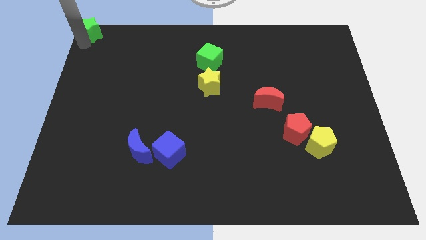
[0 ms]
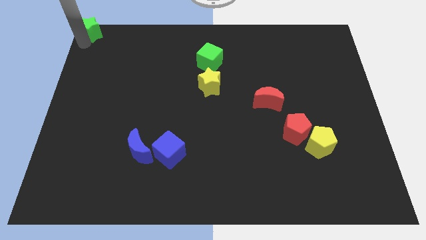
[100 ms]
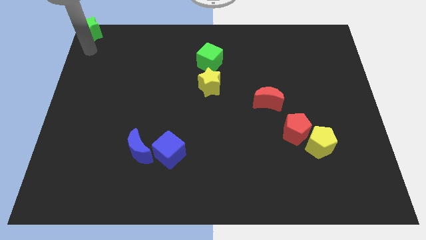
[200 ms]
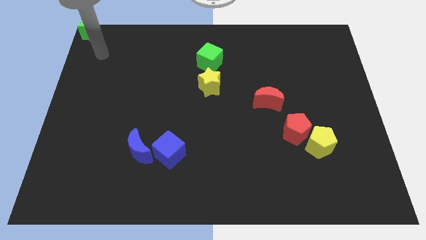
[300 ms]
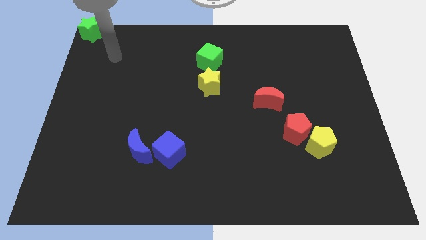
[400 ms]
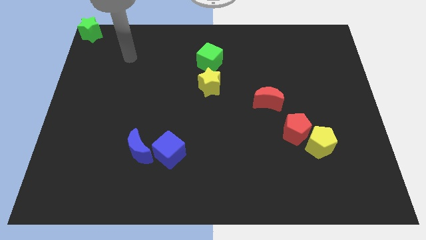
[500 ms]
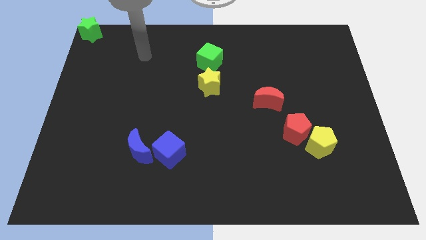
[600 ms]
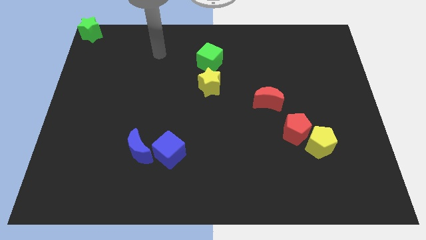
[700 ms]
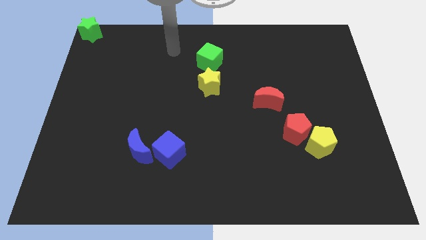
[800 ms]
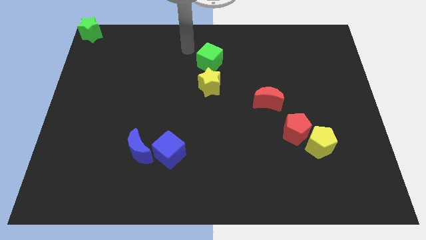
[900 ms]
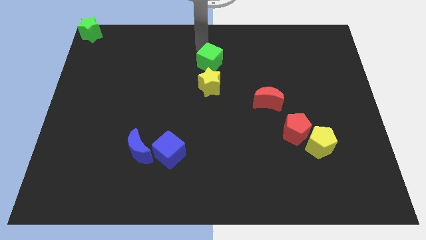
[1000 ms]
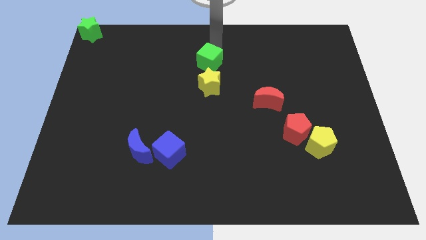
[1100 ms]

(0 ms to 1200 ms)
move your arm to the top of green cube

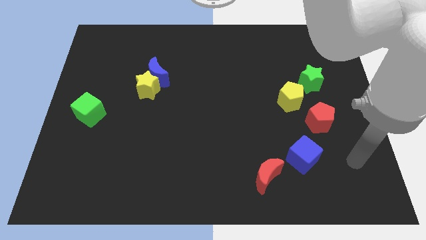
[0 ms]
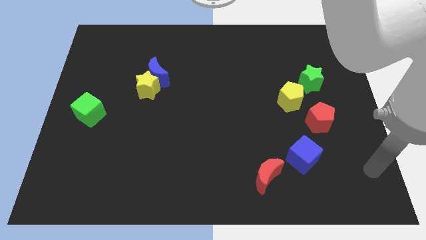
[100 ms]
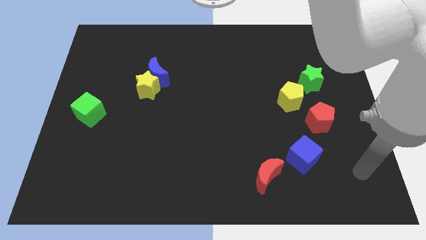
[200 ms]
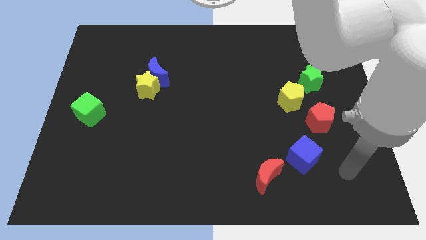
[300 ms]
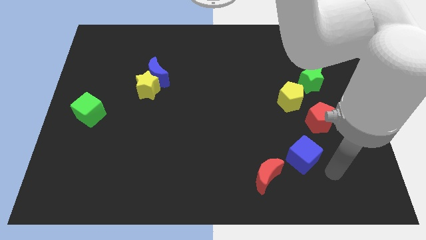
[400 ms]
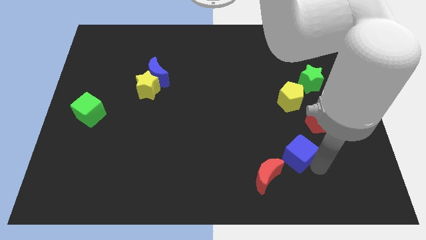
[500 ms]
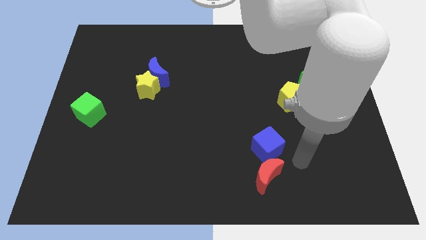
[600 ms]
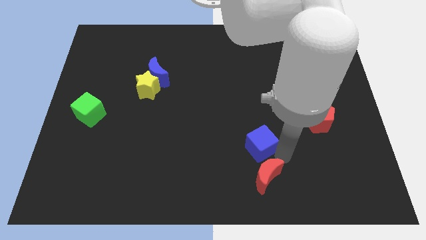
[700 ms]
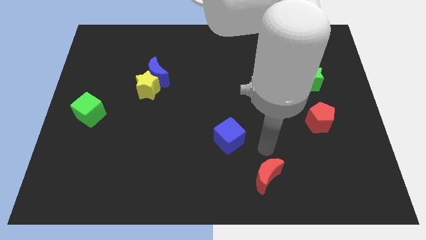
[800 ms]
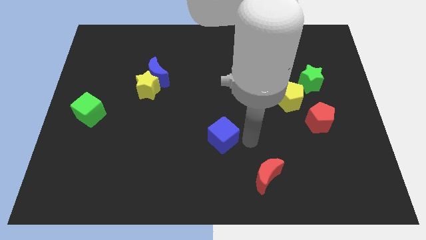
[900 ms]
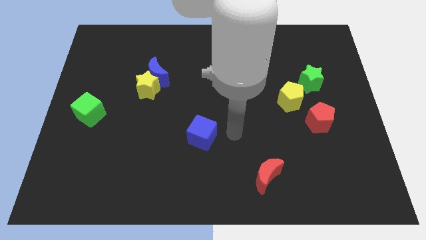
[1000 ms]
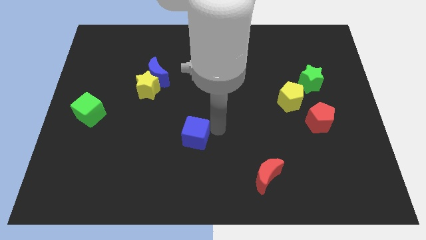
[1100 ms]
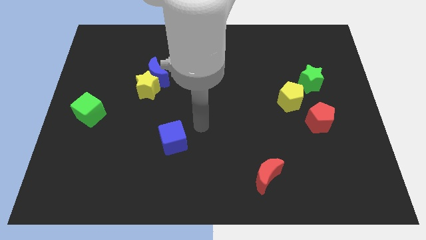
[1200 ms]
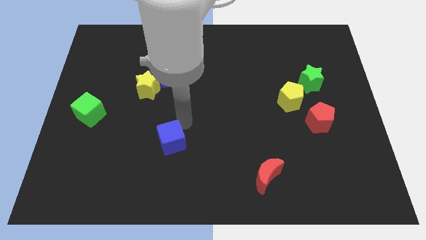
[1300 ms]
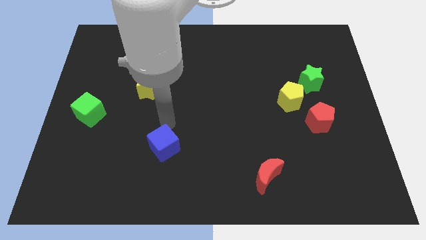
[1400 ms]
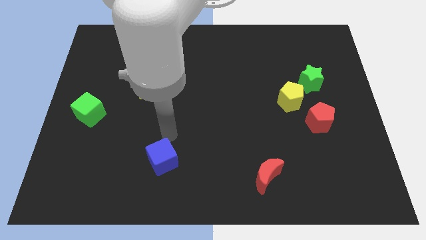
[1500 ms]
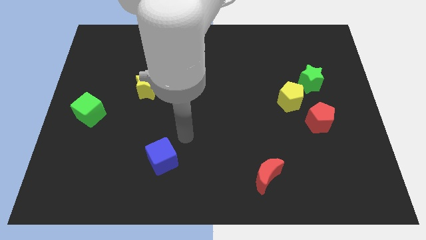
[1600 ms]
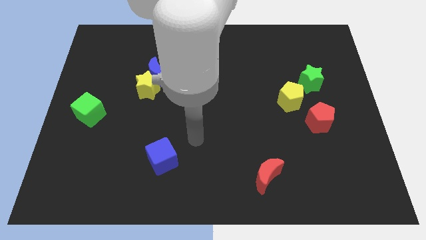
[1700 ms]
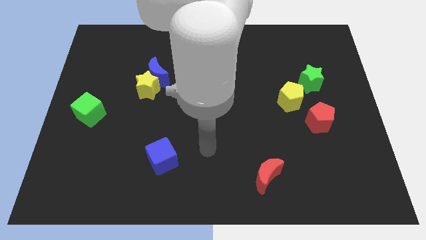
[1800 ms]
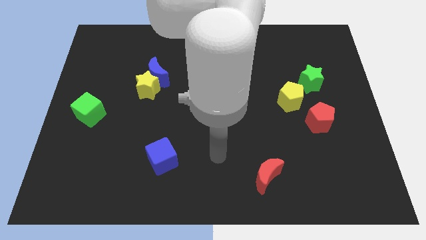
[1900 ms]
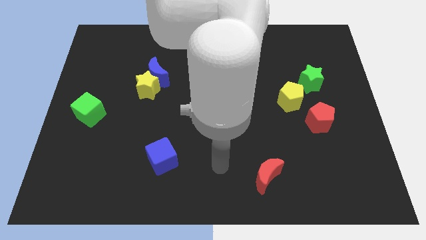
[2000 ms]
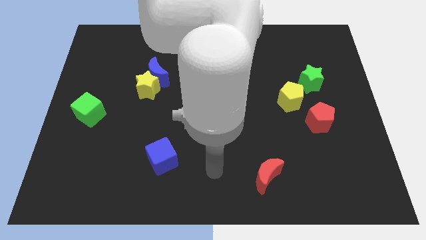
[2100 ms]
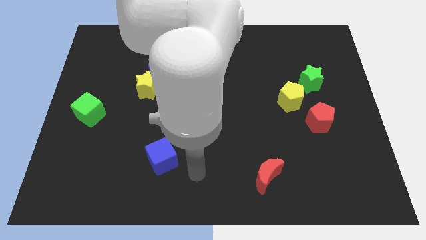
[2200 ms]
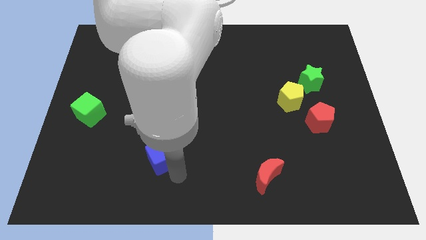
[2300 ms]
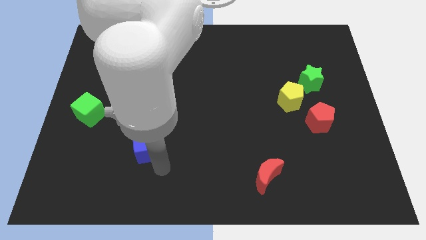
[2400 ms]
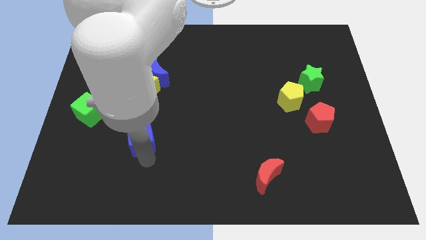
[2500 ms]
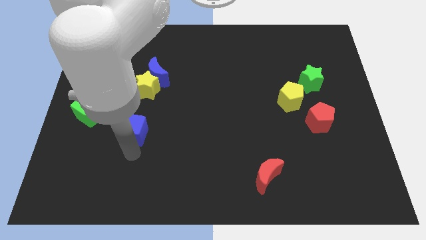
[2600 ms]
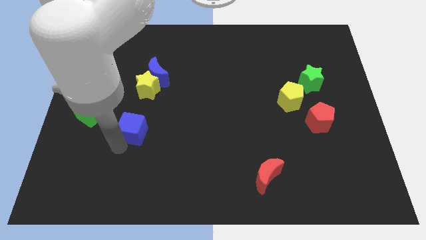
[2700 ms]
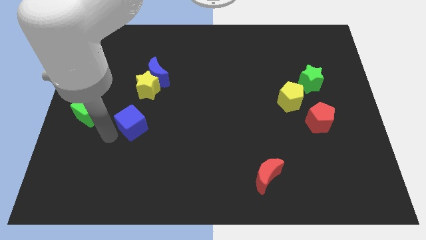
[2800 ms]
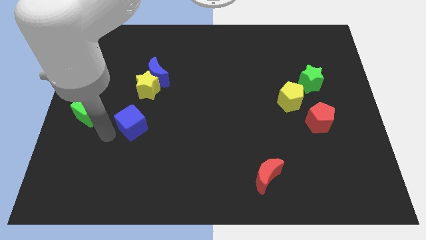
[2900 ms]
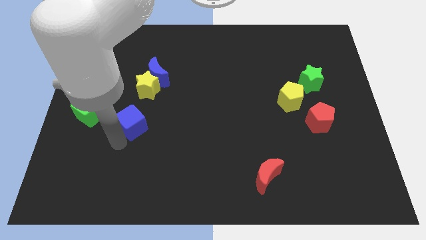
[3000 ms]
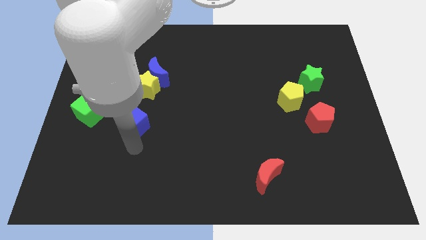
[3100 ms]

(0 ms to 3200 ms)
push the blue cube right to the green cube

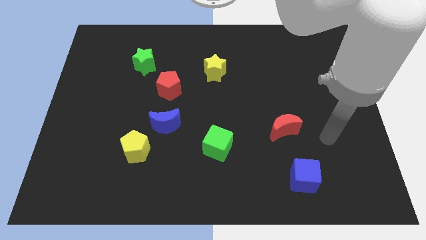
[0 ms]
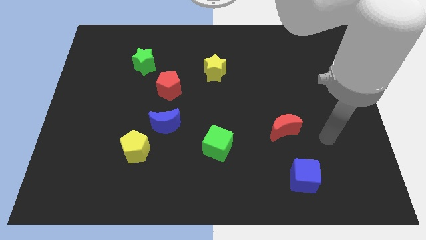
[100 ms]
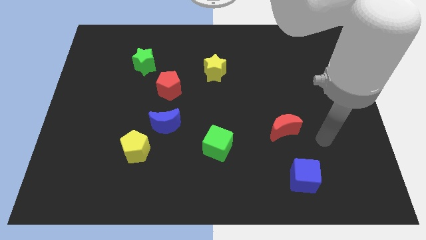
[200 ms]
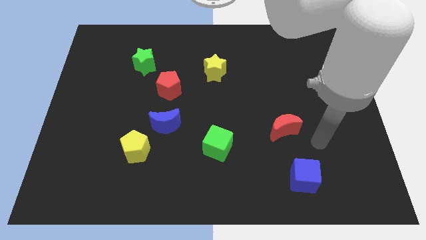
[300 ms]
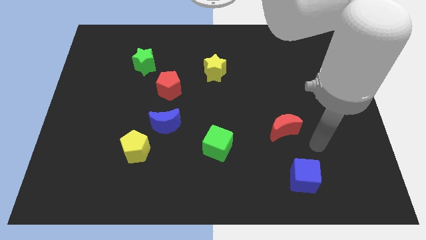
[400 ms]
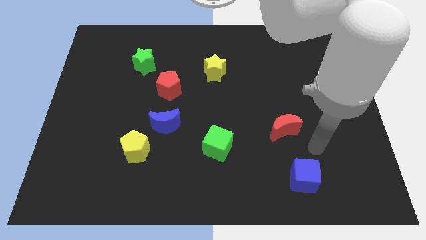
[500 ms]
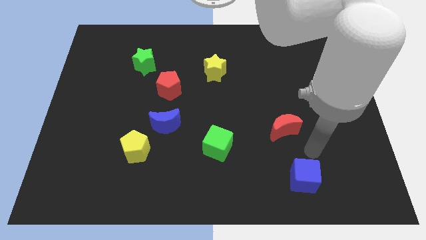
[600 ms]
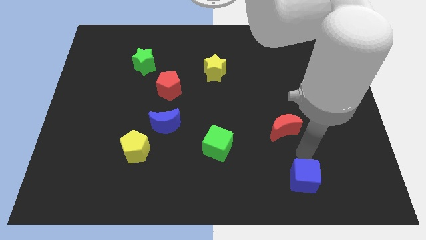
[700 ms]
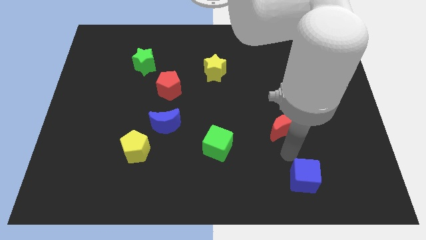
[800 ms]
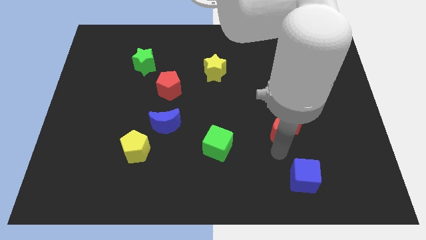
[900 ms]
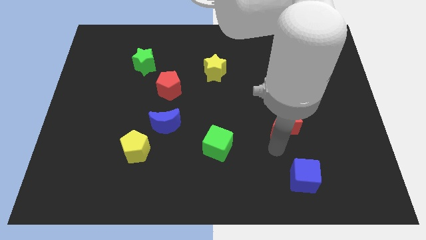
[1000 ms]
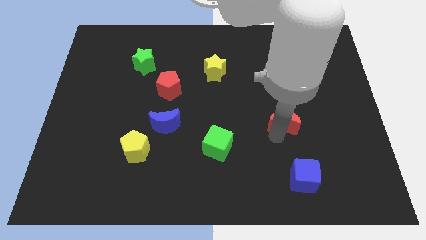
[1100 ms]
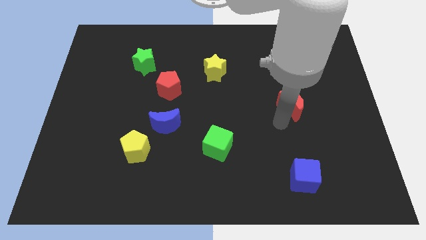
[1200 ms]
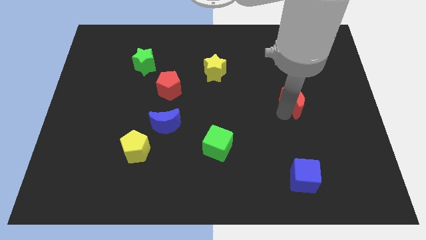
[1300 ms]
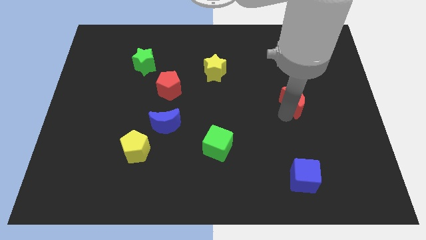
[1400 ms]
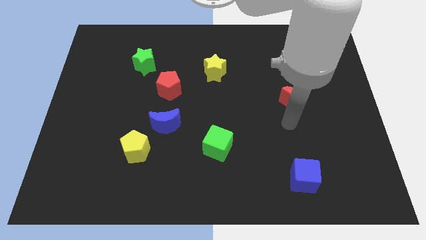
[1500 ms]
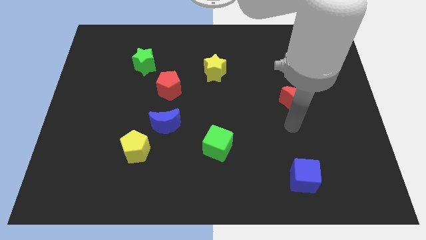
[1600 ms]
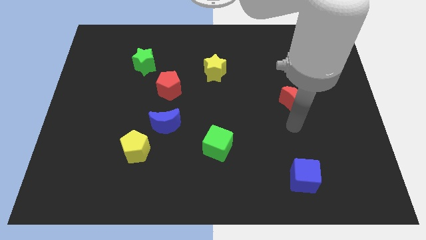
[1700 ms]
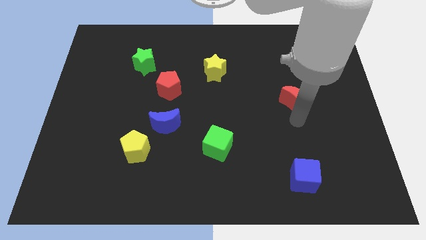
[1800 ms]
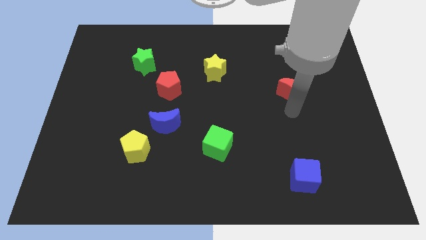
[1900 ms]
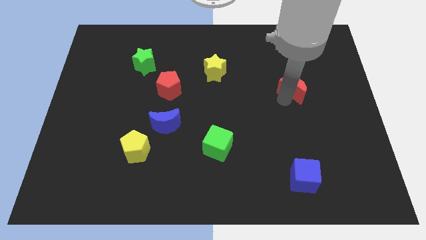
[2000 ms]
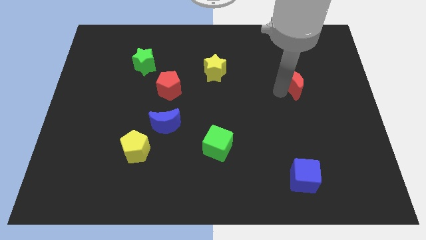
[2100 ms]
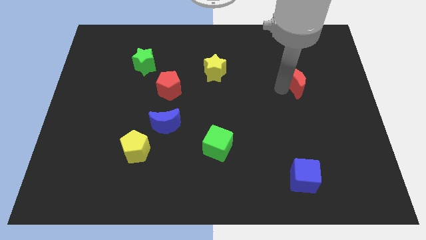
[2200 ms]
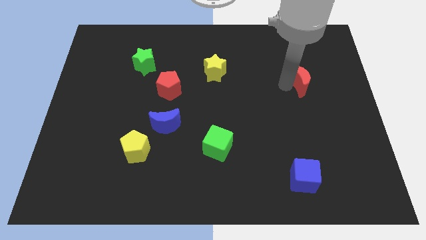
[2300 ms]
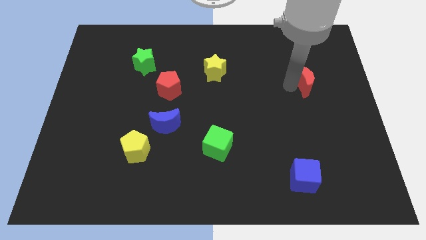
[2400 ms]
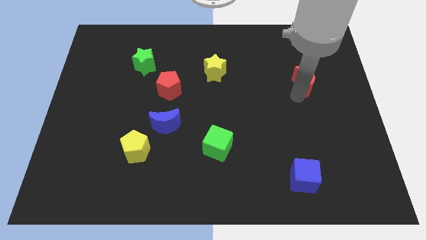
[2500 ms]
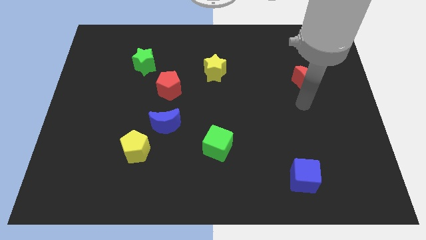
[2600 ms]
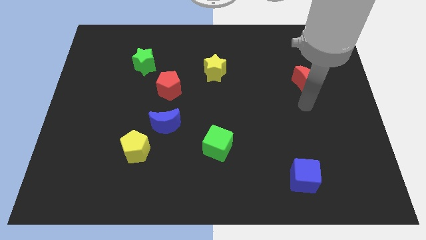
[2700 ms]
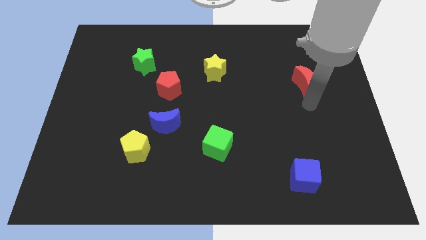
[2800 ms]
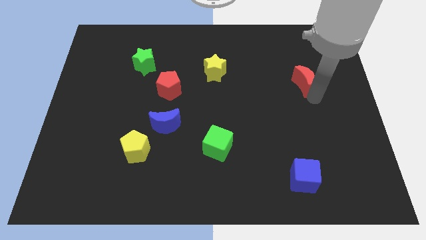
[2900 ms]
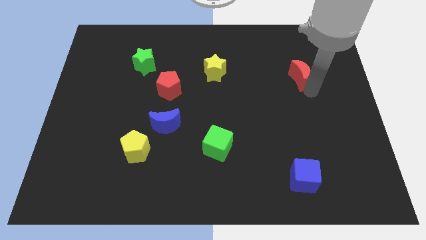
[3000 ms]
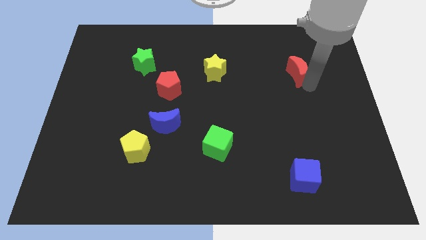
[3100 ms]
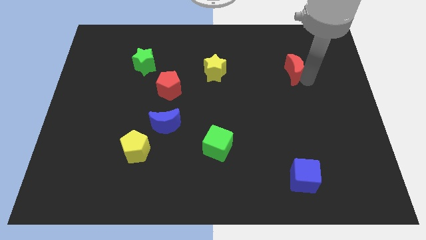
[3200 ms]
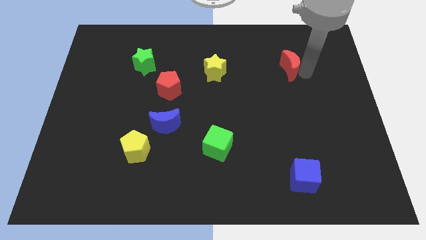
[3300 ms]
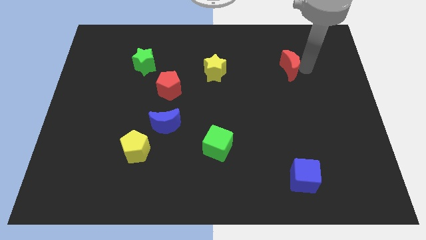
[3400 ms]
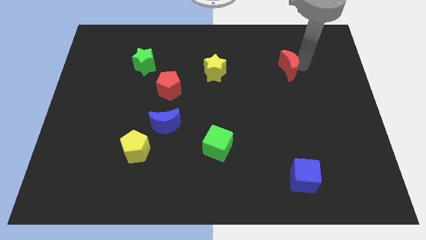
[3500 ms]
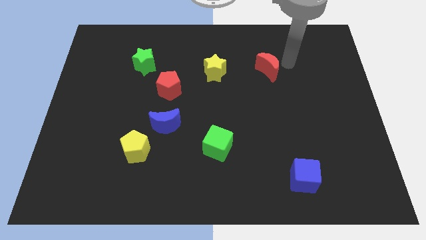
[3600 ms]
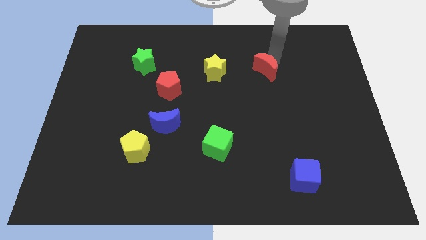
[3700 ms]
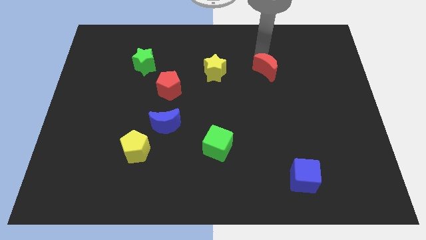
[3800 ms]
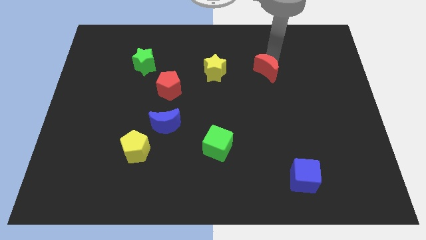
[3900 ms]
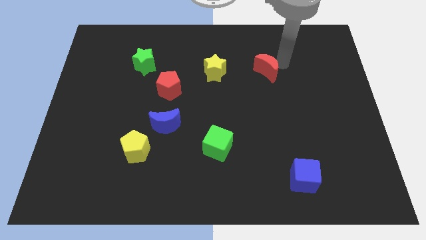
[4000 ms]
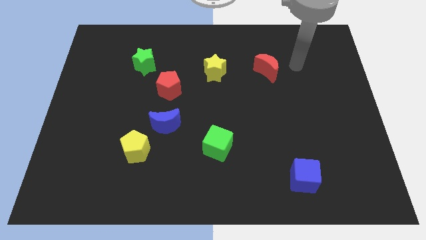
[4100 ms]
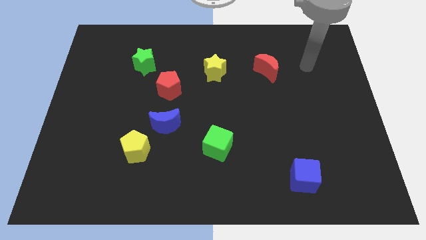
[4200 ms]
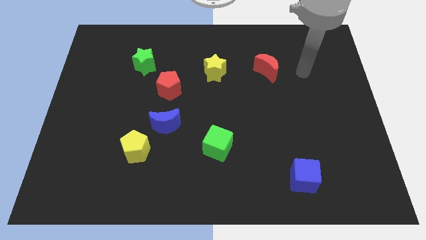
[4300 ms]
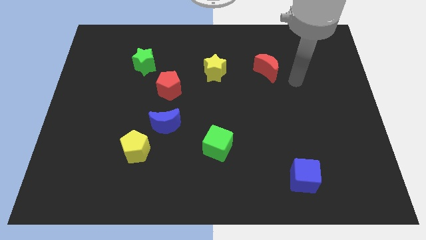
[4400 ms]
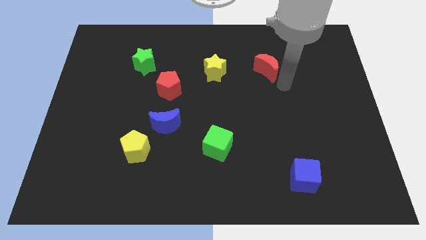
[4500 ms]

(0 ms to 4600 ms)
place the red crescent to the right side of the yellow star
